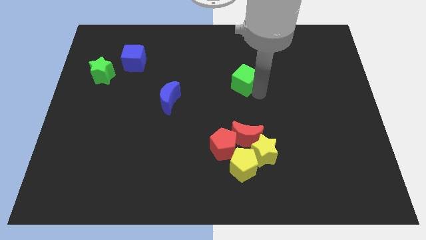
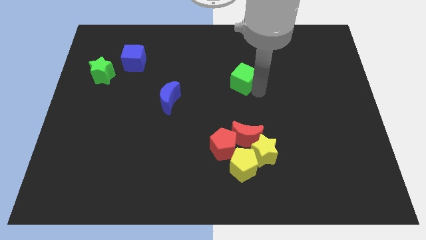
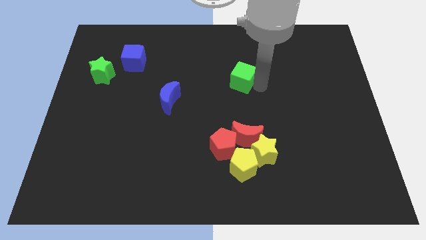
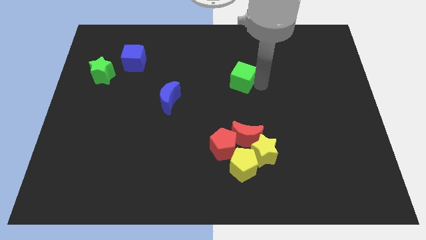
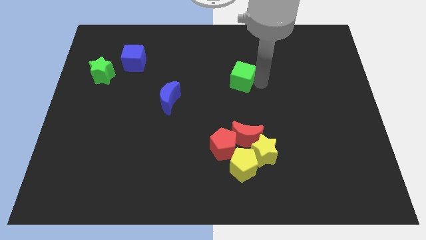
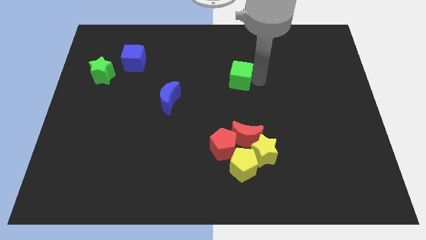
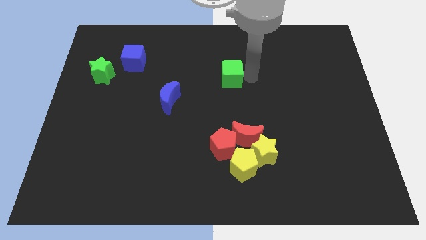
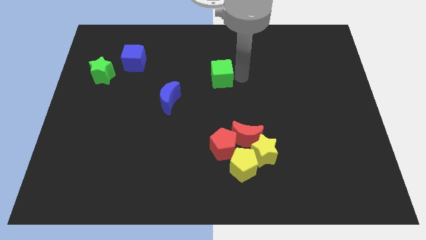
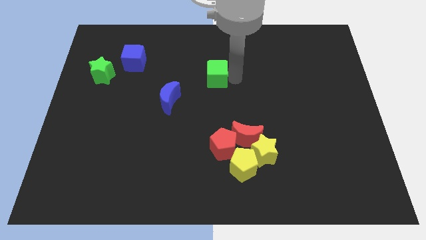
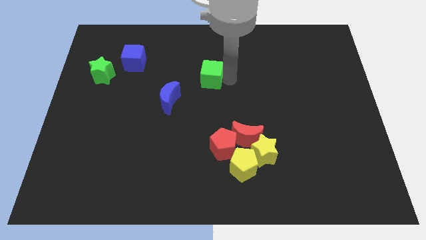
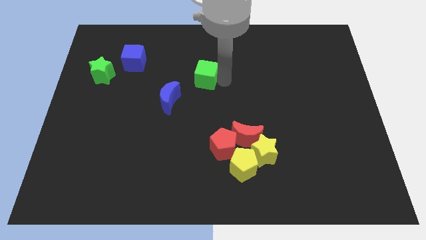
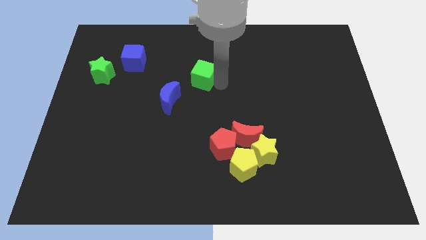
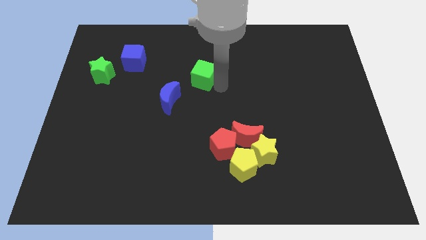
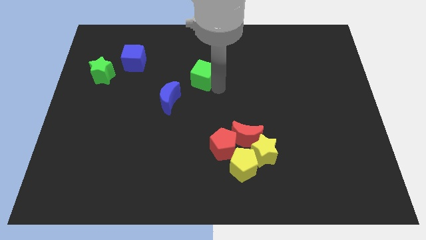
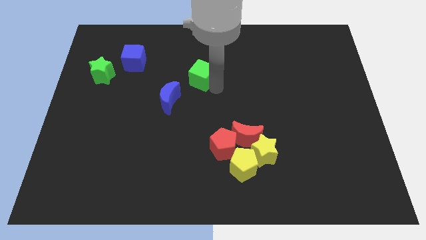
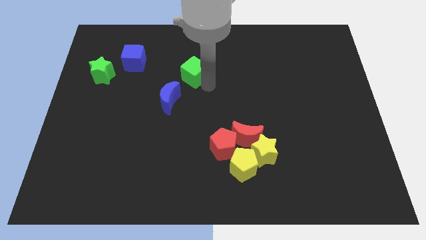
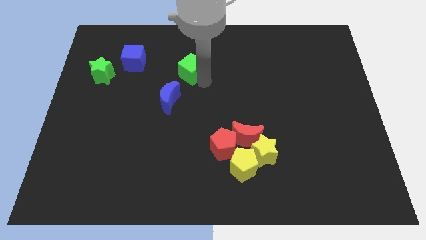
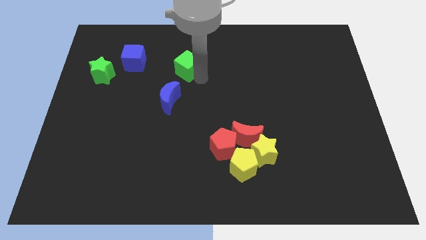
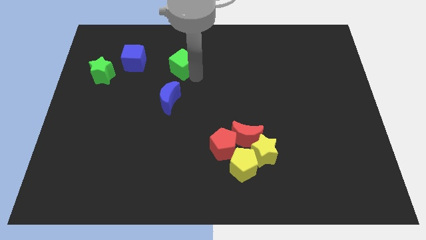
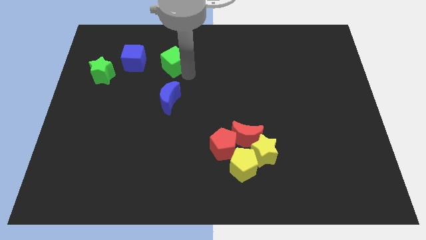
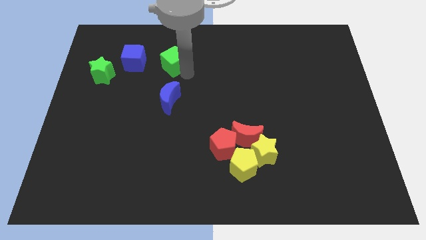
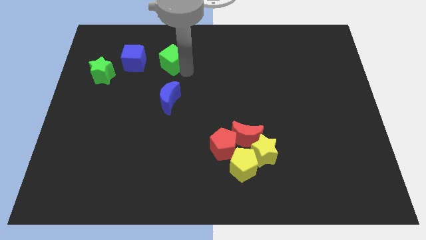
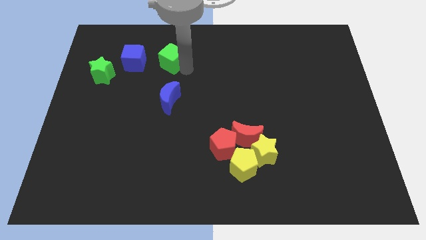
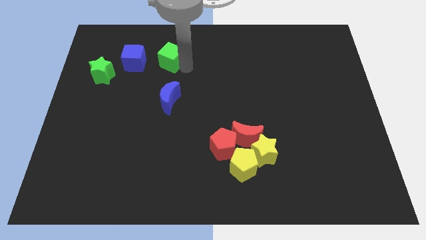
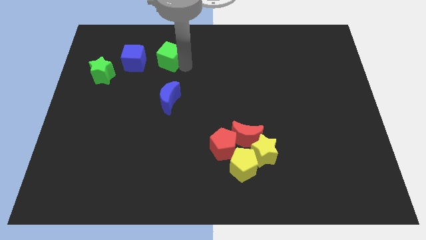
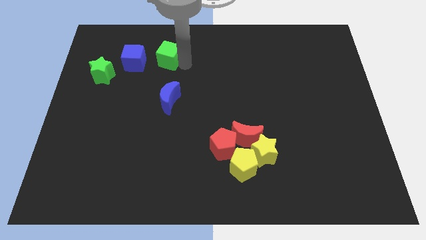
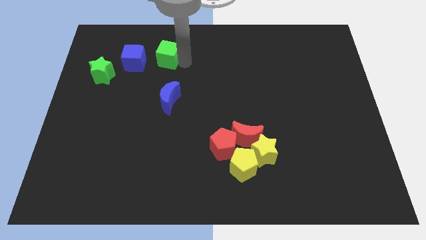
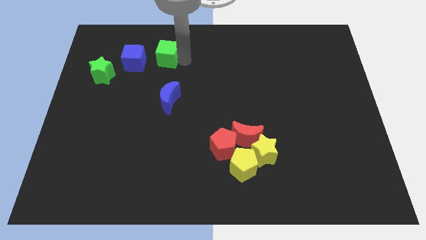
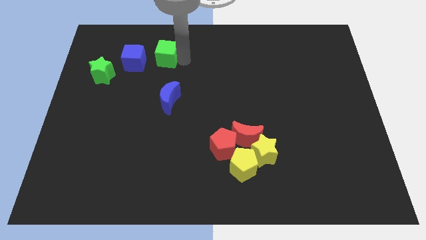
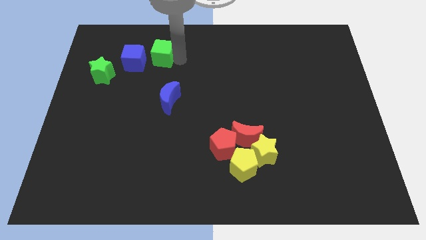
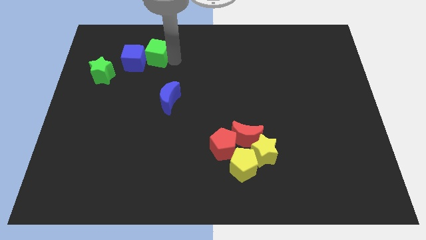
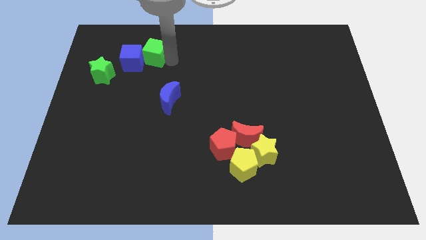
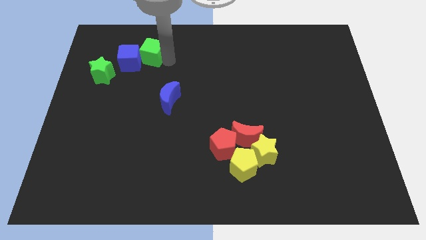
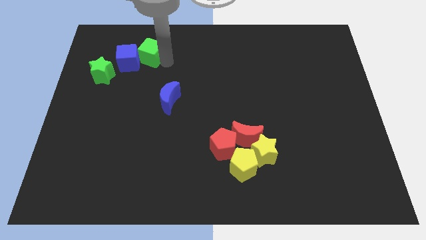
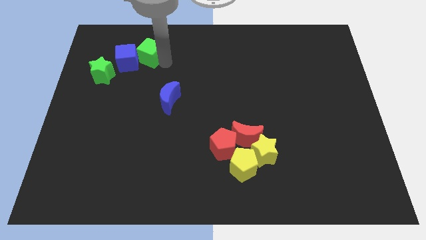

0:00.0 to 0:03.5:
move the green cube to the right side of the blue cube

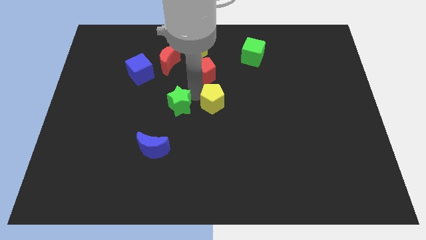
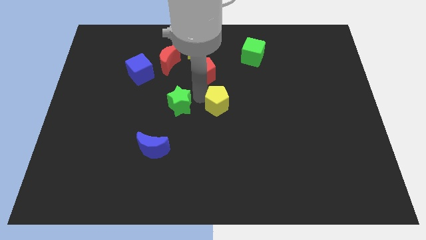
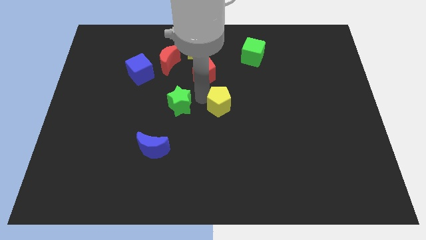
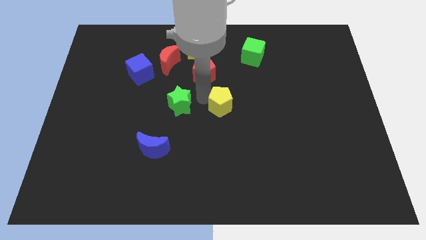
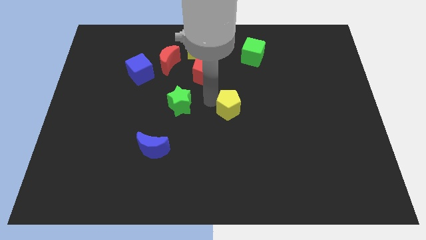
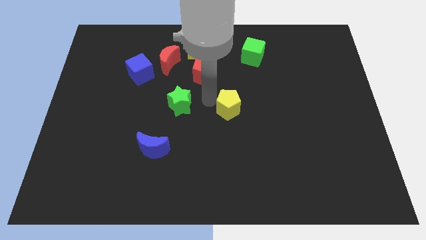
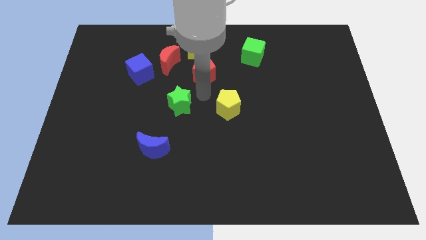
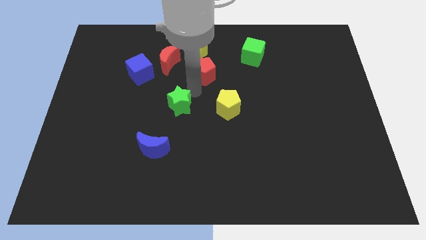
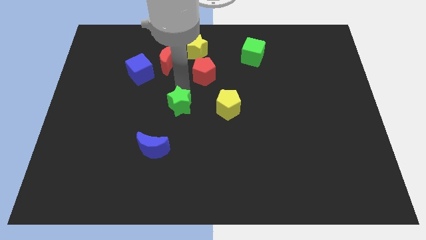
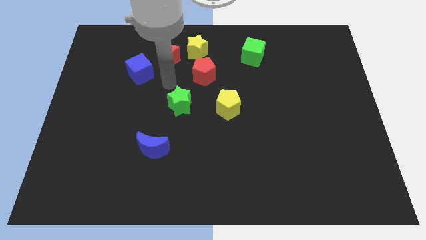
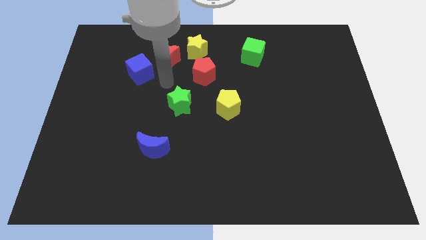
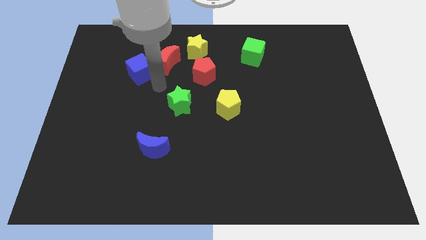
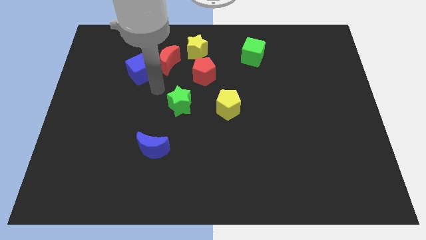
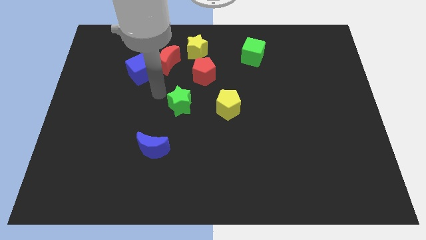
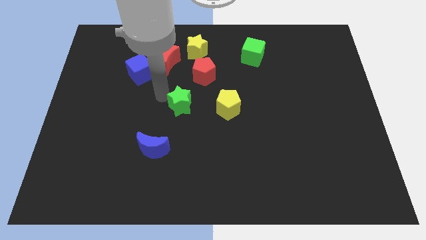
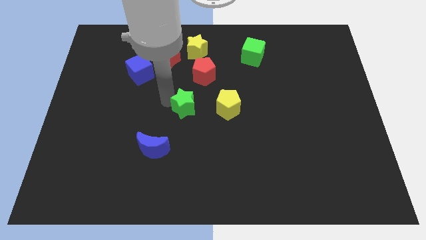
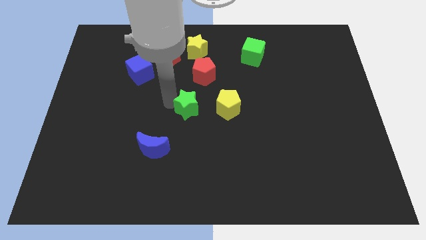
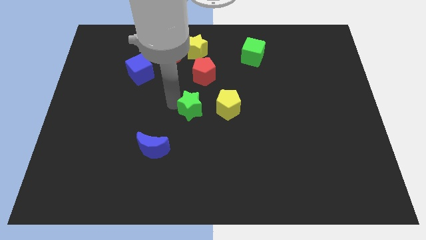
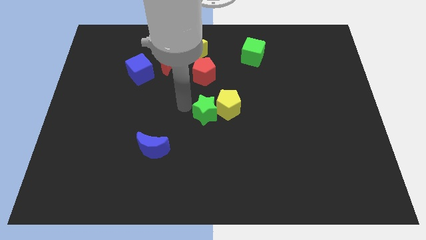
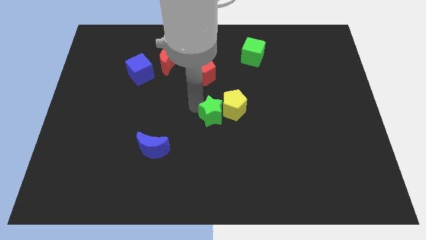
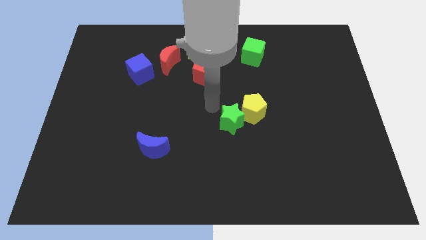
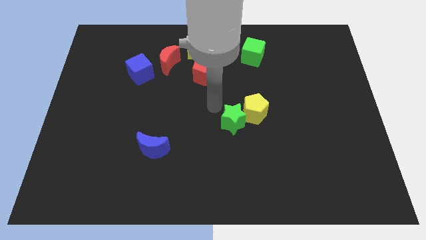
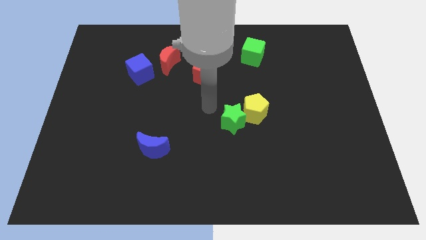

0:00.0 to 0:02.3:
move the yellow pentagon and green star together to the right side

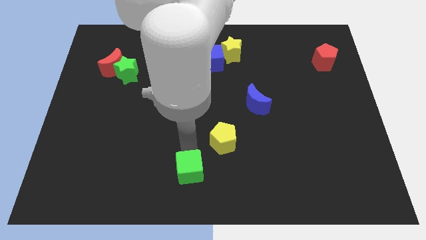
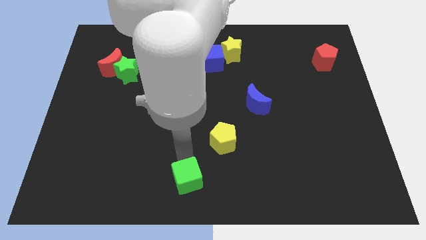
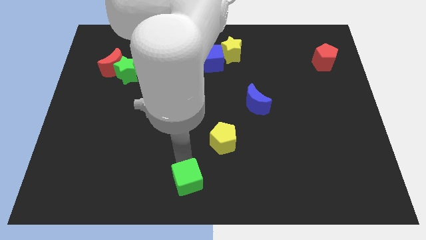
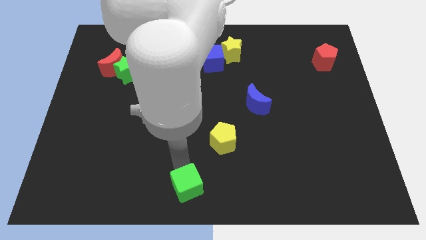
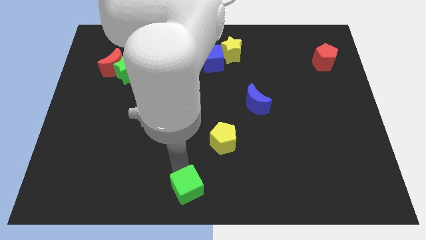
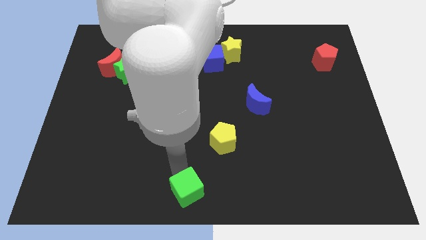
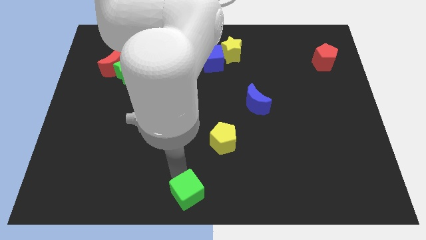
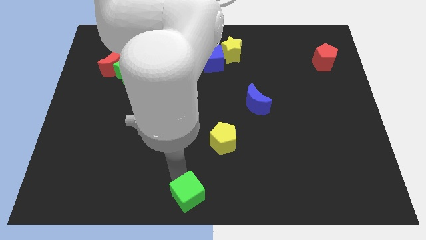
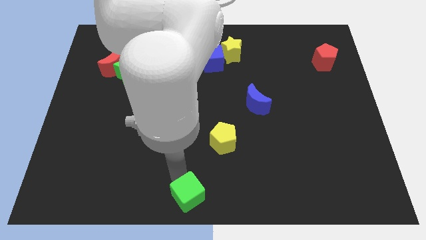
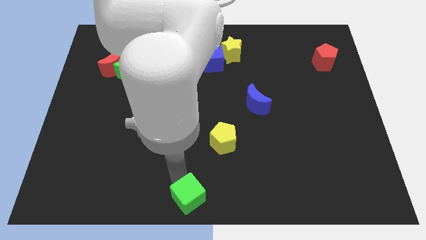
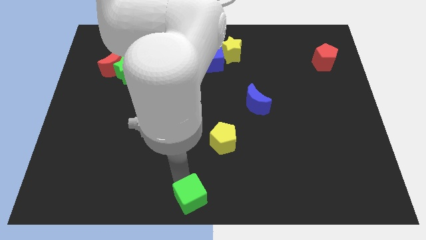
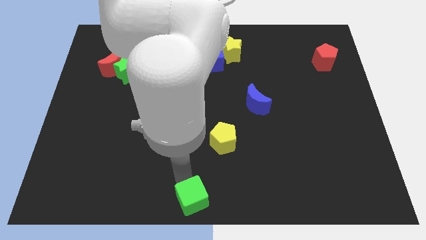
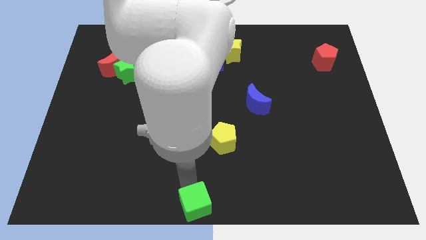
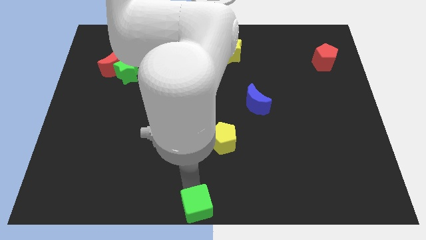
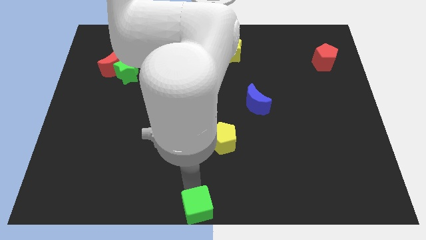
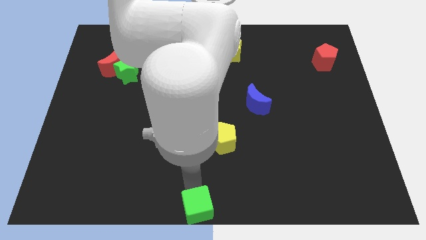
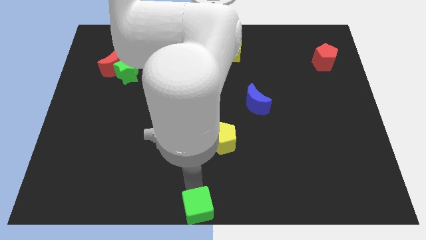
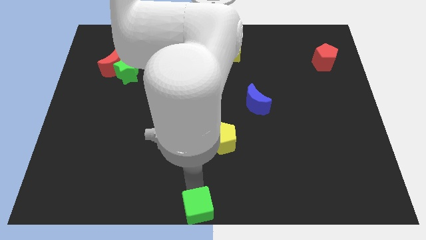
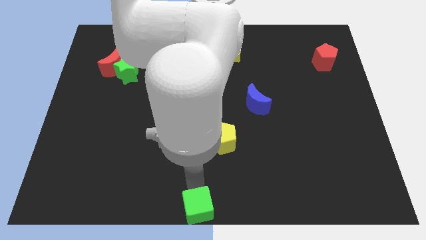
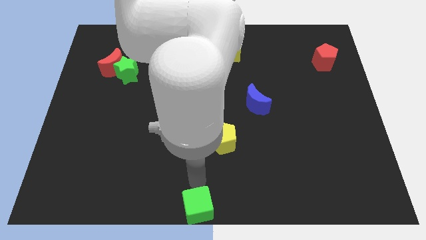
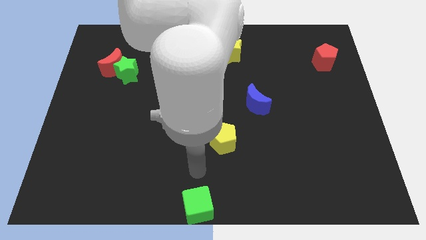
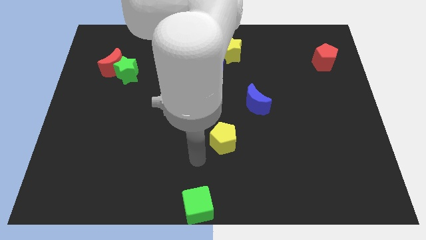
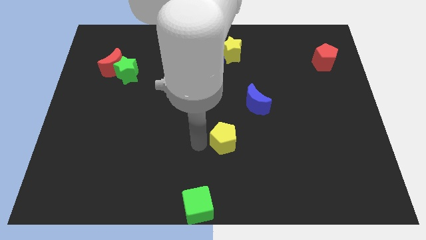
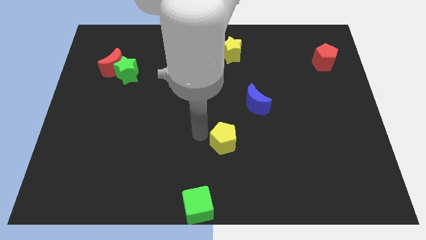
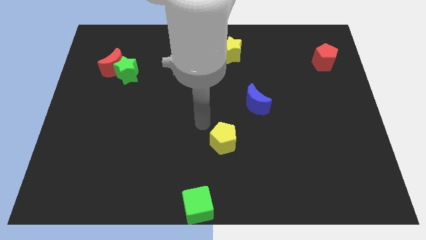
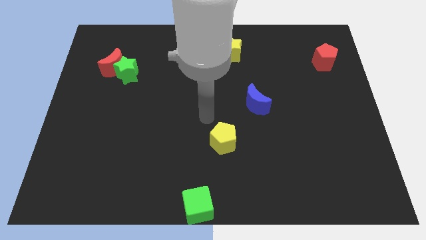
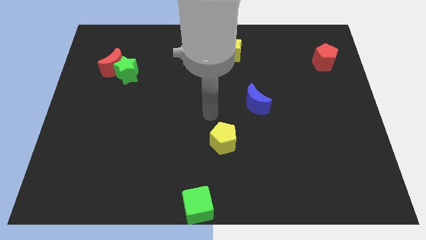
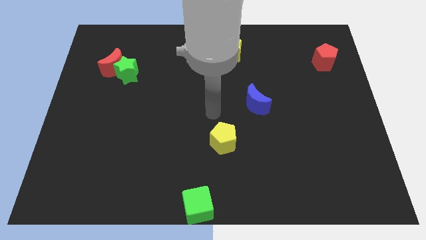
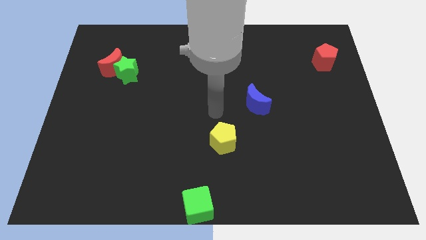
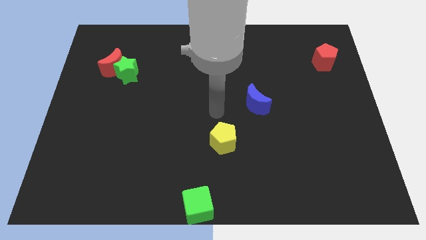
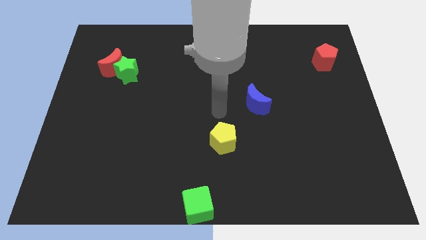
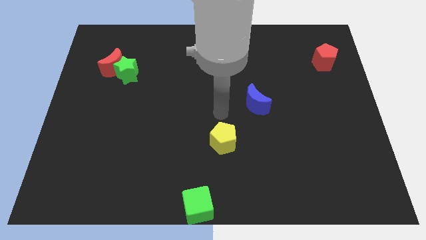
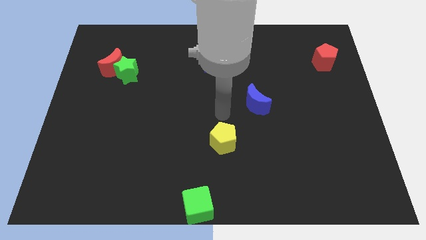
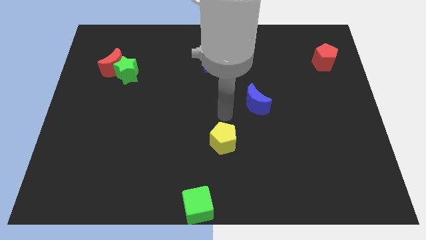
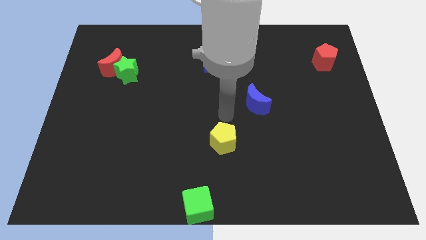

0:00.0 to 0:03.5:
move your arm close to the yellow pentagon
